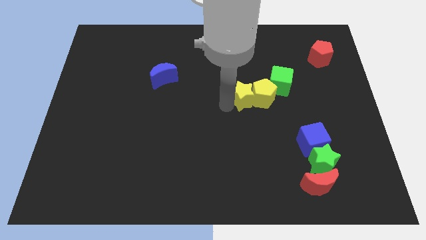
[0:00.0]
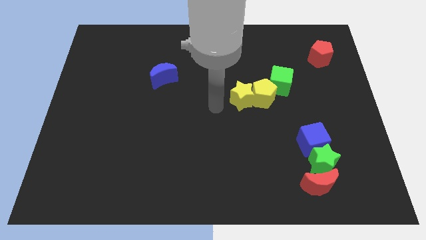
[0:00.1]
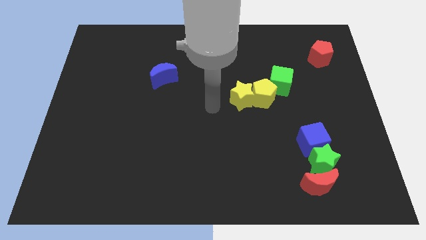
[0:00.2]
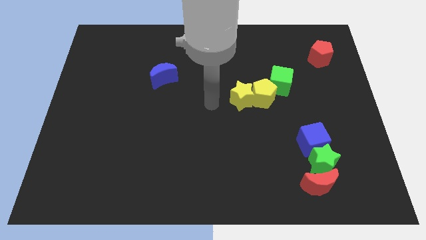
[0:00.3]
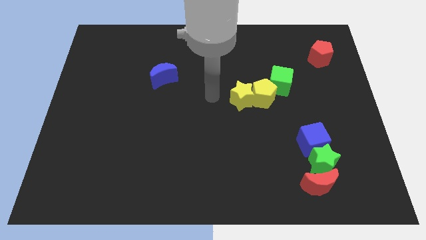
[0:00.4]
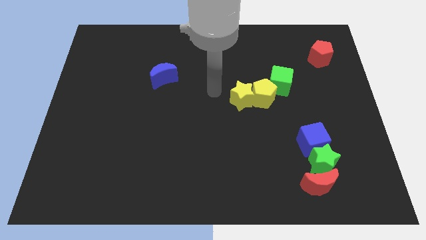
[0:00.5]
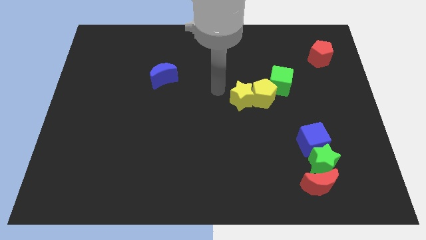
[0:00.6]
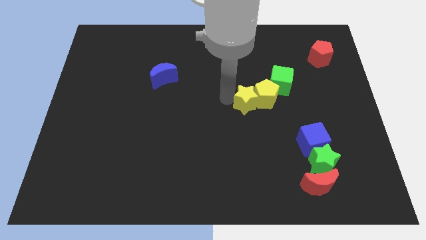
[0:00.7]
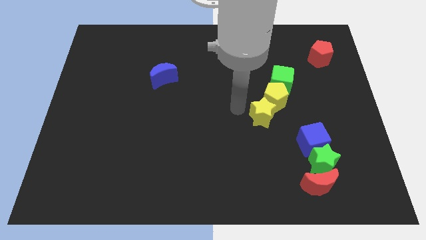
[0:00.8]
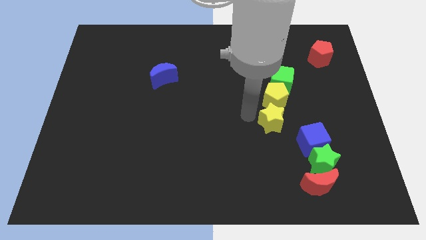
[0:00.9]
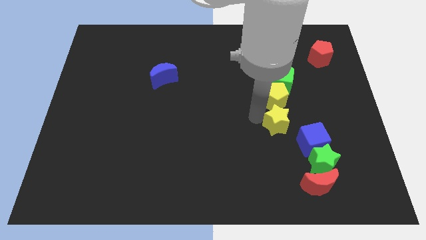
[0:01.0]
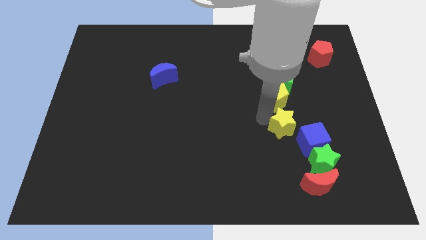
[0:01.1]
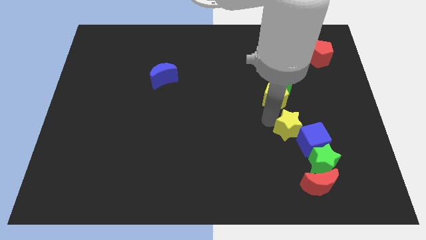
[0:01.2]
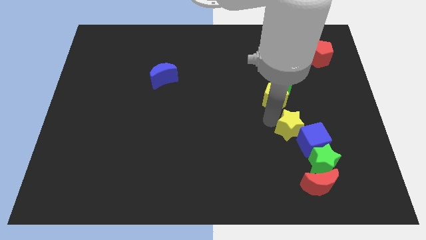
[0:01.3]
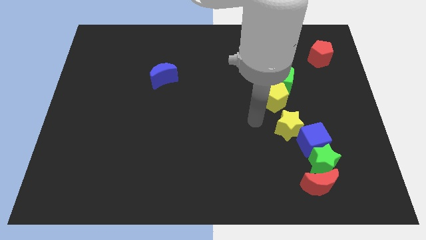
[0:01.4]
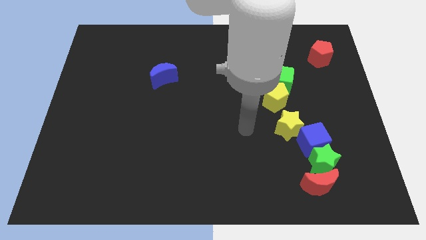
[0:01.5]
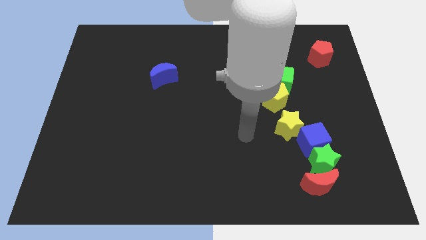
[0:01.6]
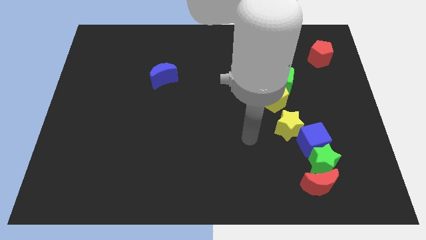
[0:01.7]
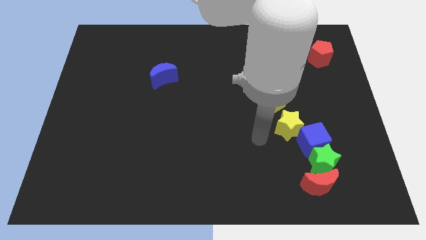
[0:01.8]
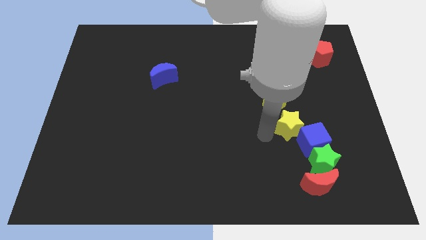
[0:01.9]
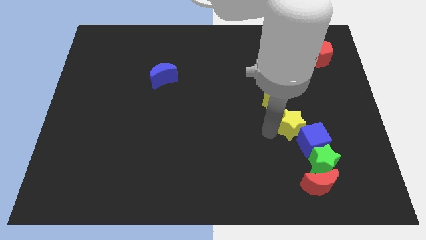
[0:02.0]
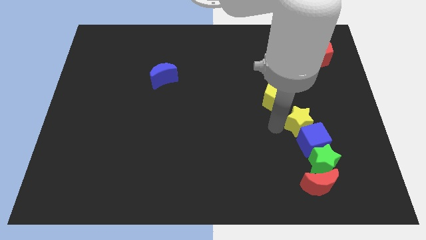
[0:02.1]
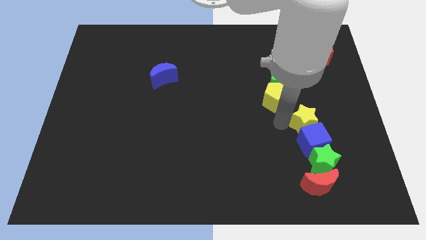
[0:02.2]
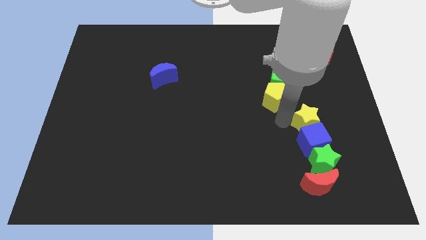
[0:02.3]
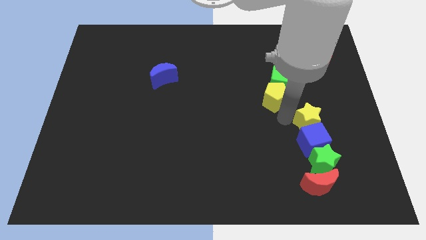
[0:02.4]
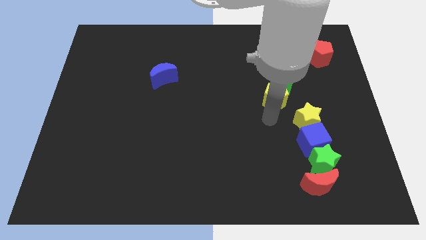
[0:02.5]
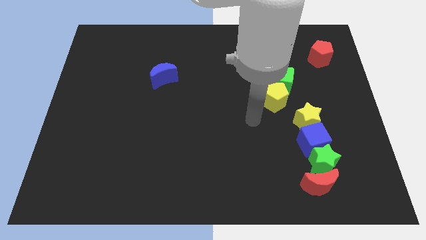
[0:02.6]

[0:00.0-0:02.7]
place the yellow star above the blue cube

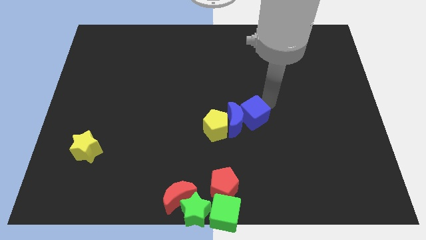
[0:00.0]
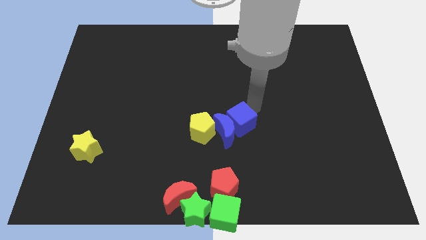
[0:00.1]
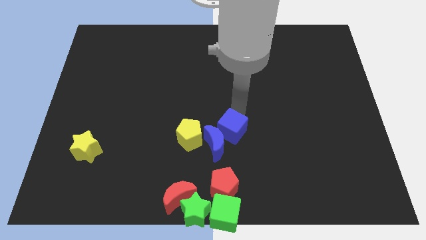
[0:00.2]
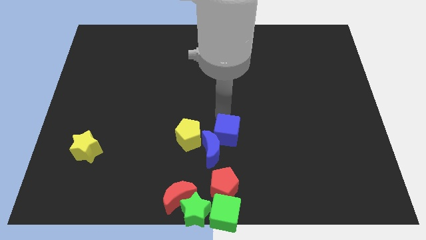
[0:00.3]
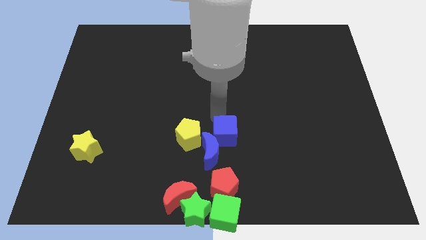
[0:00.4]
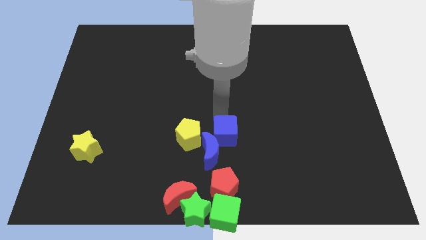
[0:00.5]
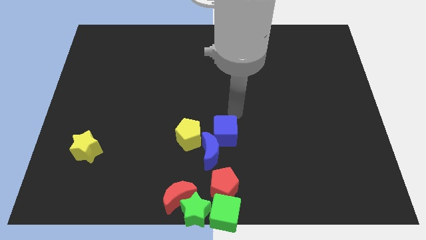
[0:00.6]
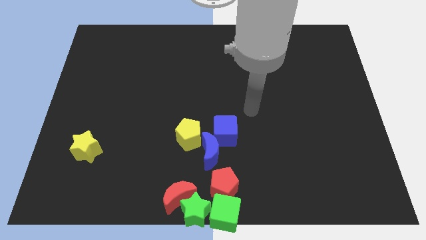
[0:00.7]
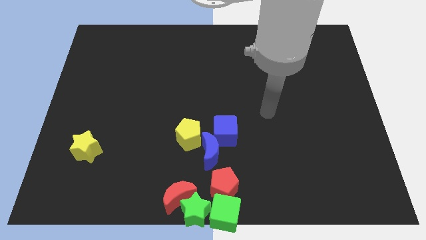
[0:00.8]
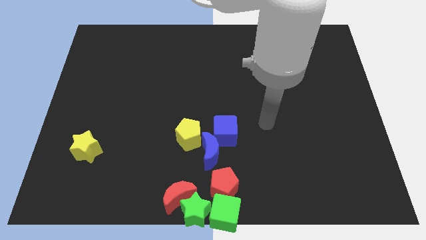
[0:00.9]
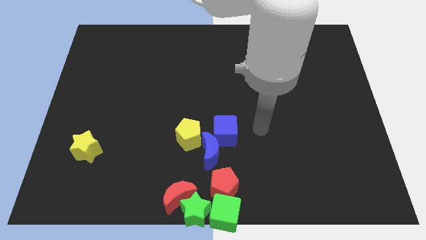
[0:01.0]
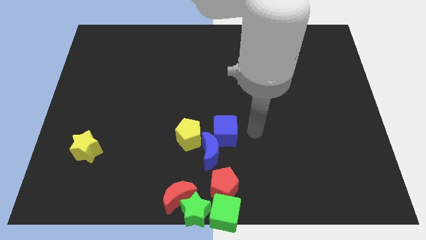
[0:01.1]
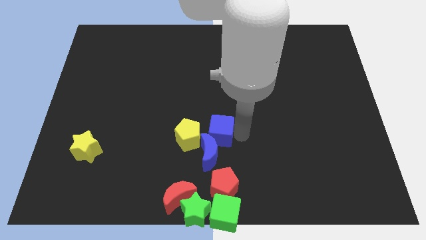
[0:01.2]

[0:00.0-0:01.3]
place the arm right to the blue cube

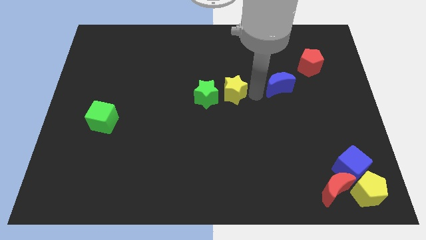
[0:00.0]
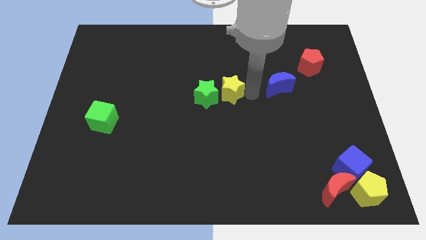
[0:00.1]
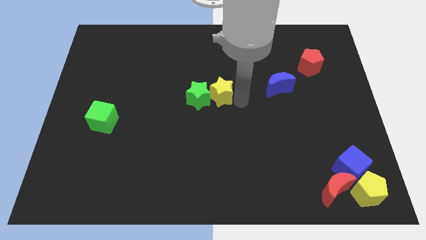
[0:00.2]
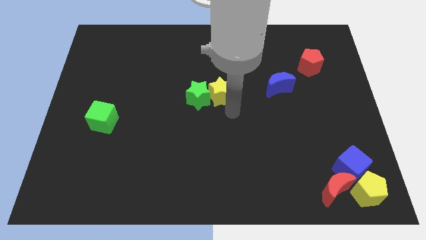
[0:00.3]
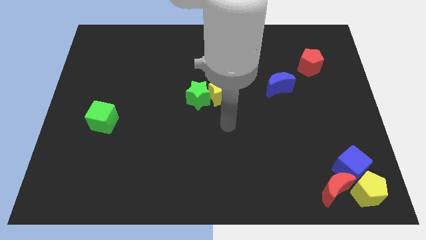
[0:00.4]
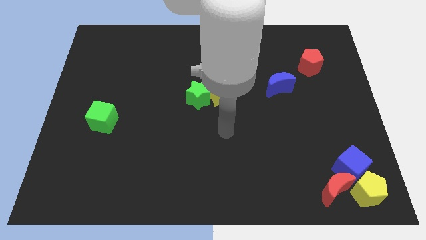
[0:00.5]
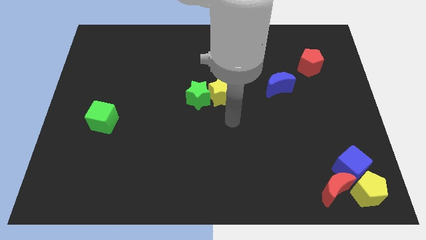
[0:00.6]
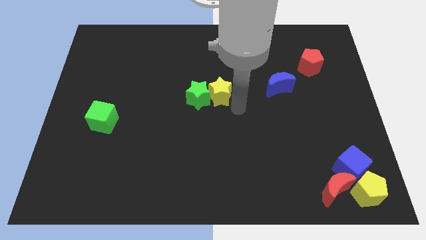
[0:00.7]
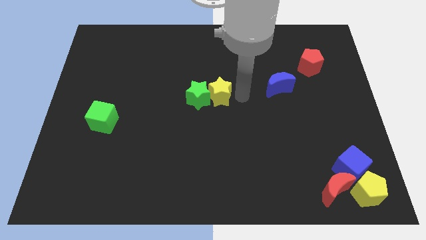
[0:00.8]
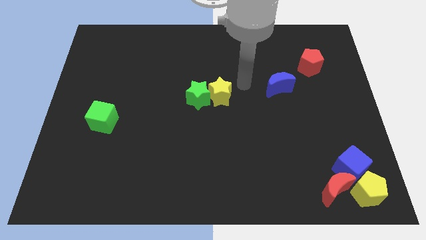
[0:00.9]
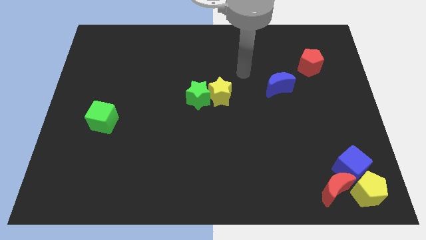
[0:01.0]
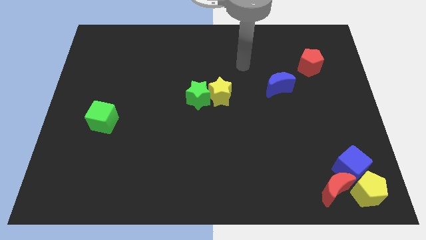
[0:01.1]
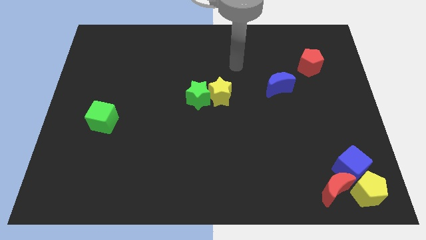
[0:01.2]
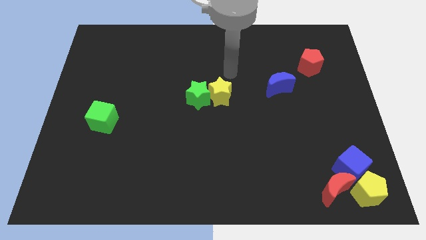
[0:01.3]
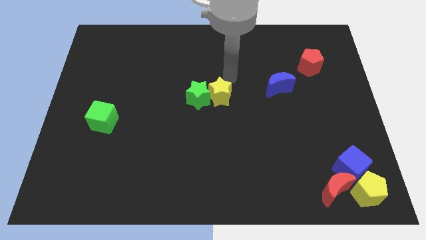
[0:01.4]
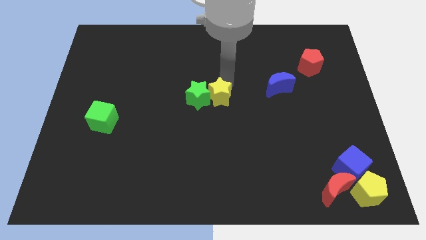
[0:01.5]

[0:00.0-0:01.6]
push the yellow star into the green star

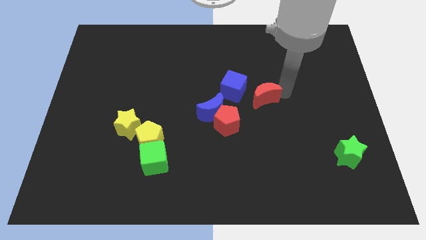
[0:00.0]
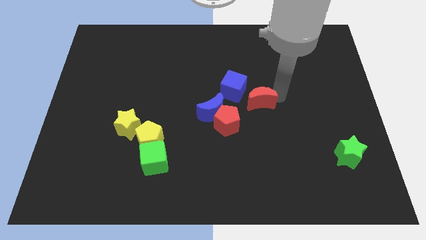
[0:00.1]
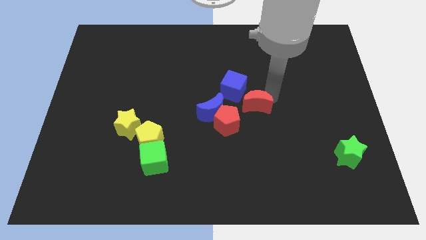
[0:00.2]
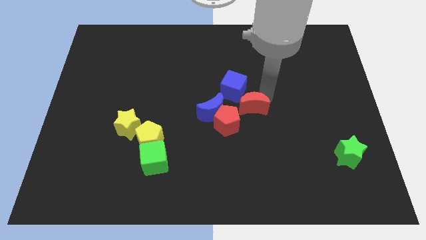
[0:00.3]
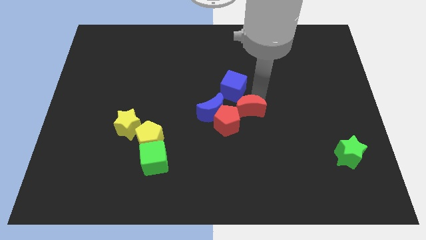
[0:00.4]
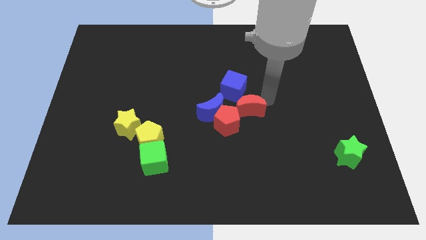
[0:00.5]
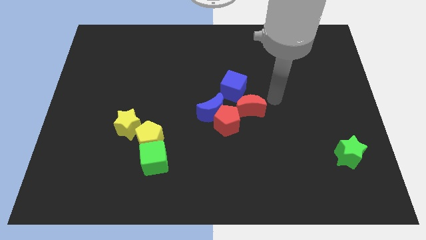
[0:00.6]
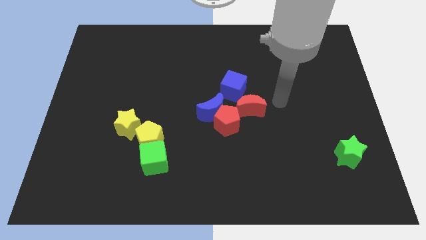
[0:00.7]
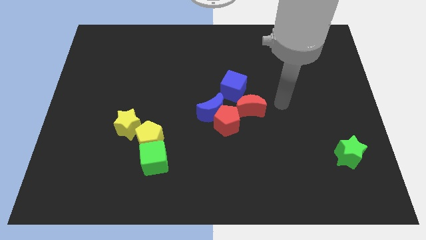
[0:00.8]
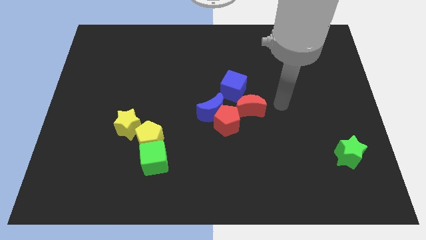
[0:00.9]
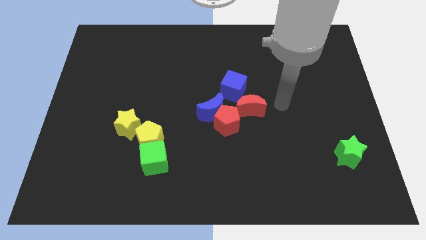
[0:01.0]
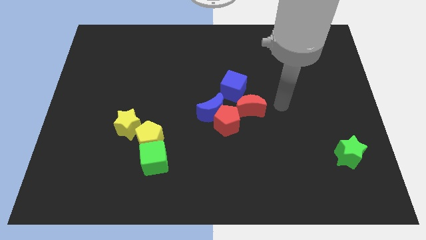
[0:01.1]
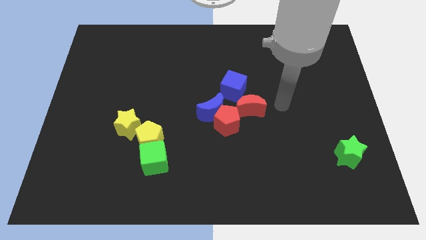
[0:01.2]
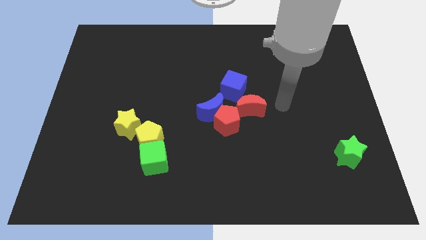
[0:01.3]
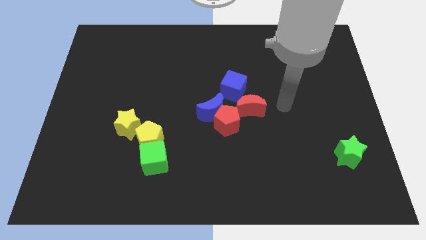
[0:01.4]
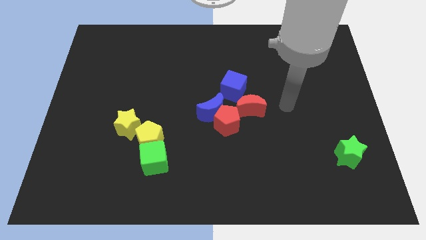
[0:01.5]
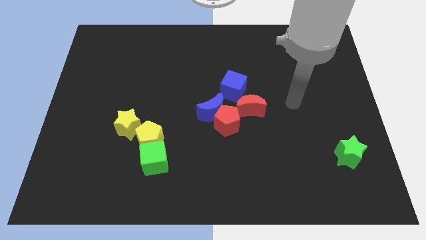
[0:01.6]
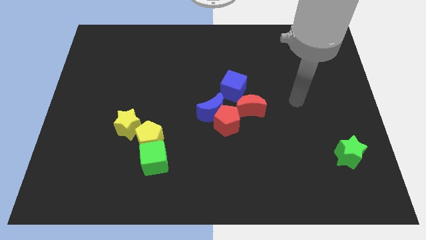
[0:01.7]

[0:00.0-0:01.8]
push the red moon into the red pentagon

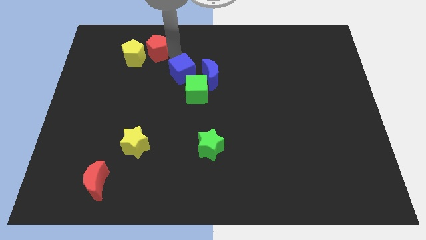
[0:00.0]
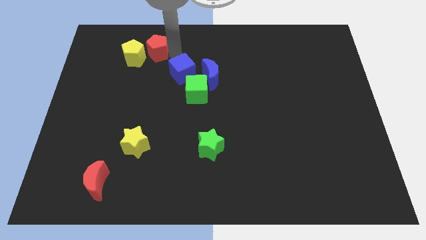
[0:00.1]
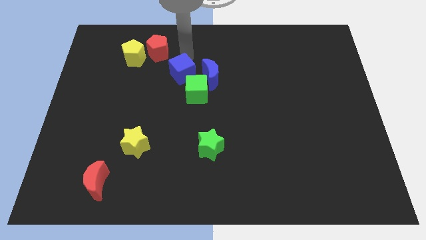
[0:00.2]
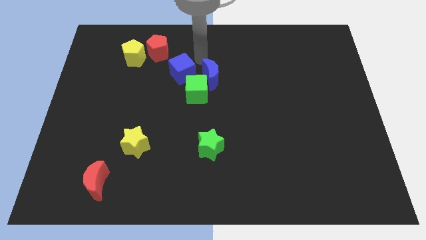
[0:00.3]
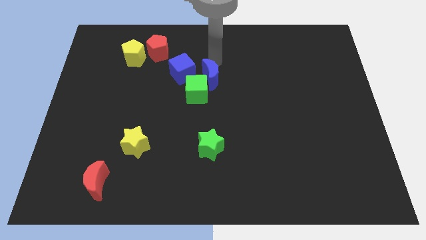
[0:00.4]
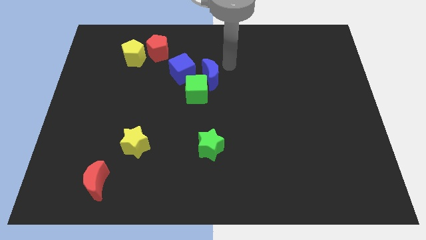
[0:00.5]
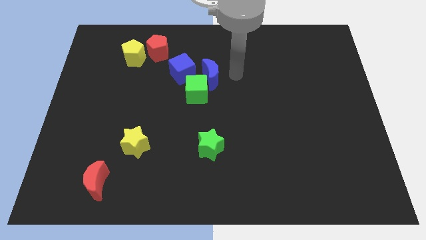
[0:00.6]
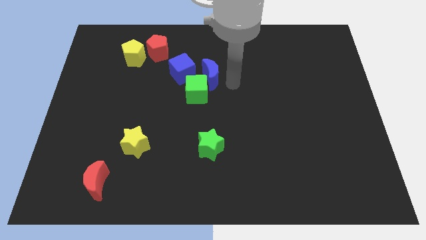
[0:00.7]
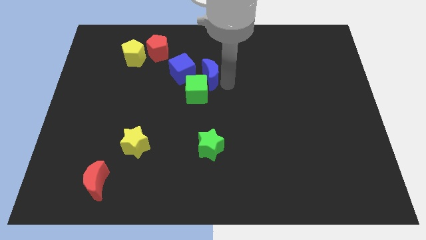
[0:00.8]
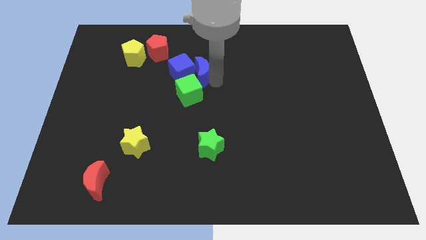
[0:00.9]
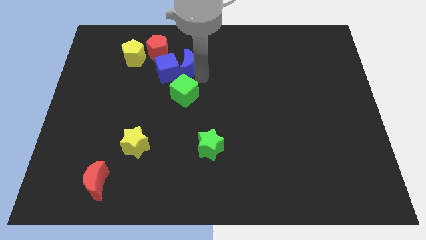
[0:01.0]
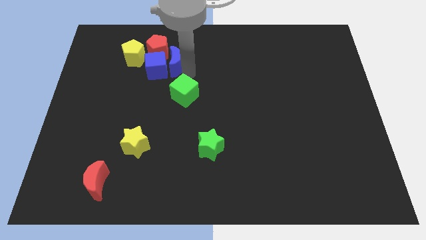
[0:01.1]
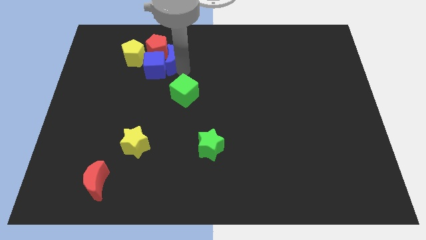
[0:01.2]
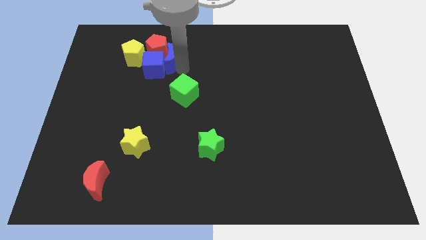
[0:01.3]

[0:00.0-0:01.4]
drag the blue moon close to the red pentagon
